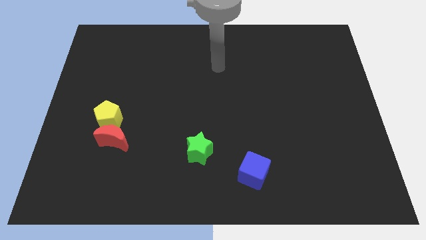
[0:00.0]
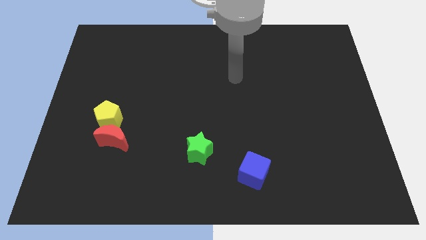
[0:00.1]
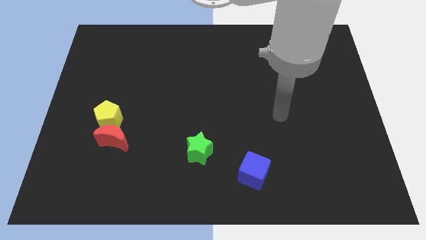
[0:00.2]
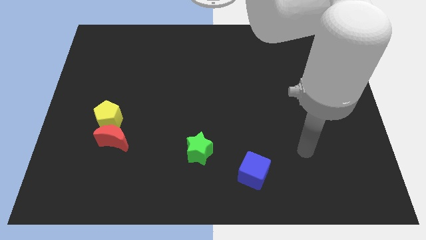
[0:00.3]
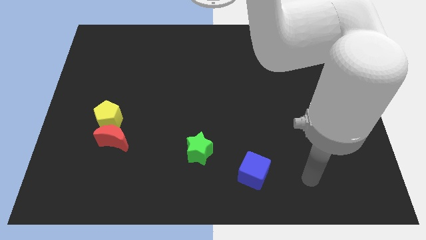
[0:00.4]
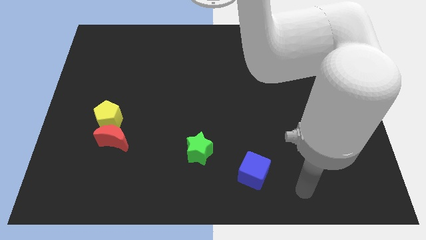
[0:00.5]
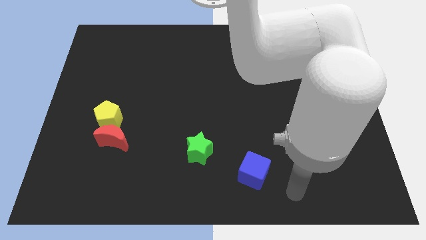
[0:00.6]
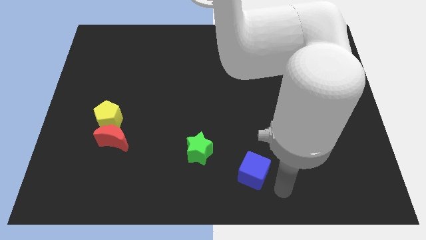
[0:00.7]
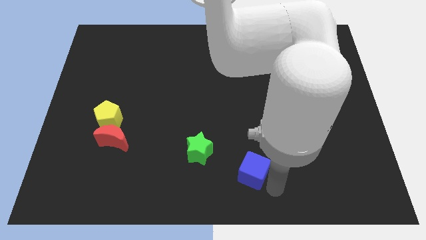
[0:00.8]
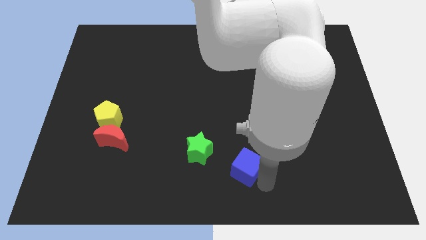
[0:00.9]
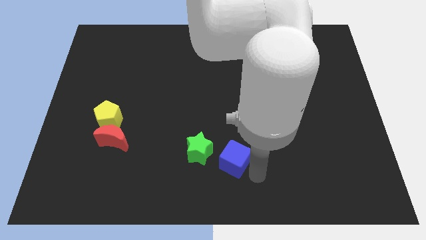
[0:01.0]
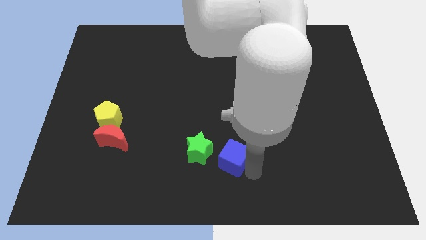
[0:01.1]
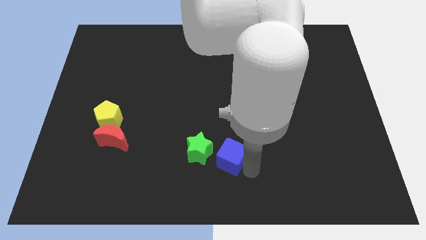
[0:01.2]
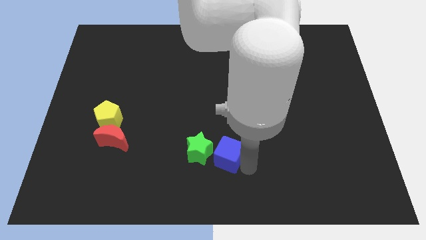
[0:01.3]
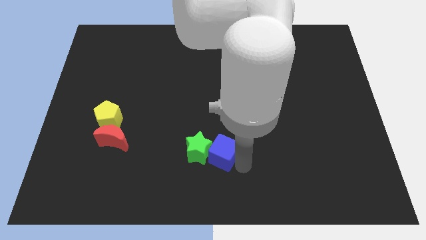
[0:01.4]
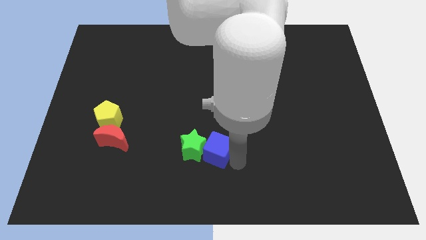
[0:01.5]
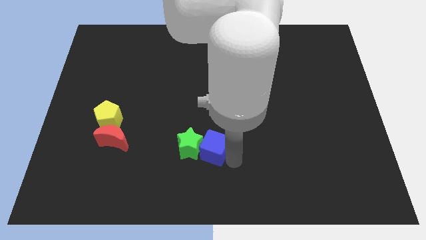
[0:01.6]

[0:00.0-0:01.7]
push the blue block towards the green star

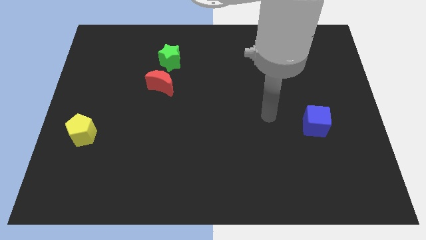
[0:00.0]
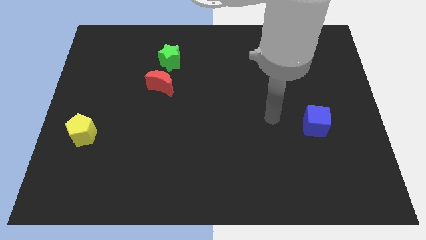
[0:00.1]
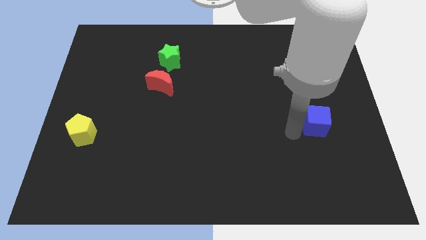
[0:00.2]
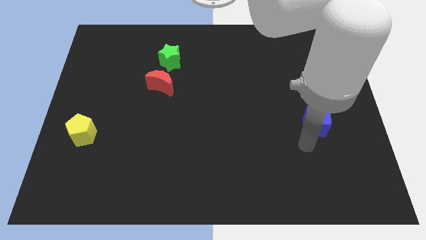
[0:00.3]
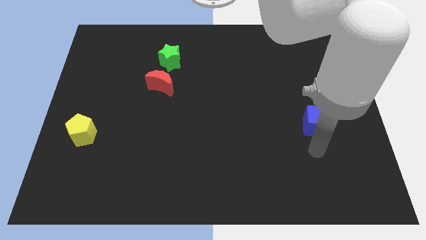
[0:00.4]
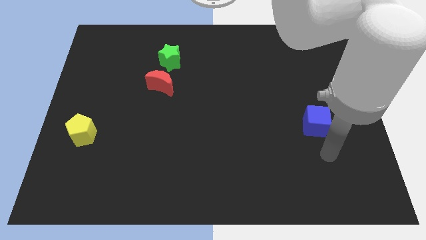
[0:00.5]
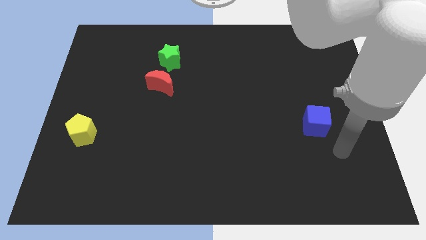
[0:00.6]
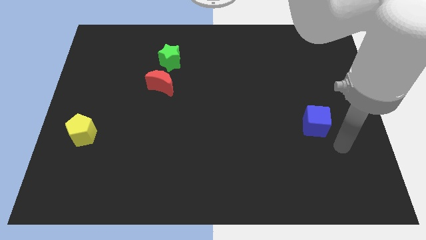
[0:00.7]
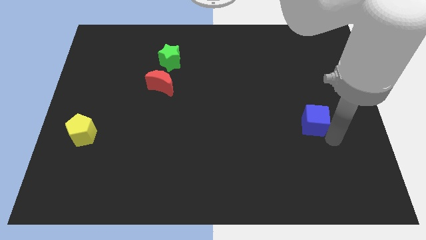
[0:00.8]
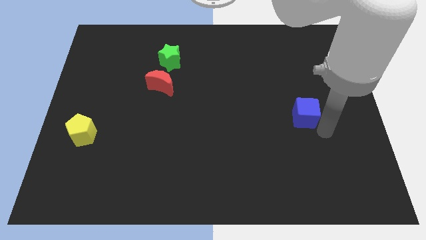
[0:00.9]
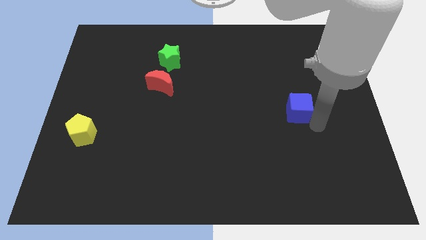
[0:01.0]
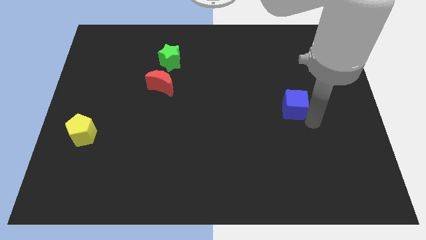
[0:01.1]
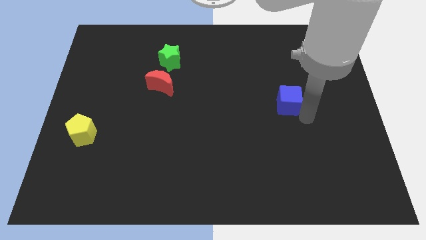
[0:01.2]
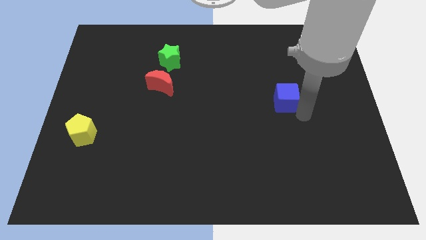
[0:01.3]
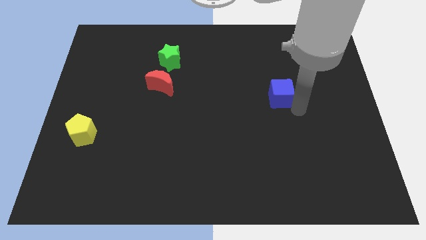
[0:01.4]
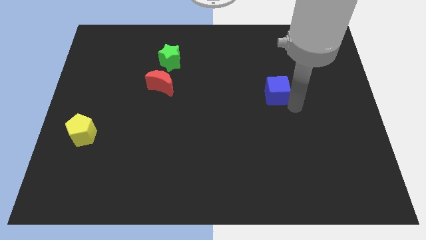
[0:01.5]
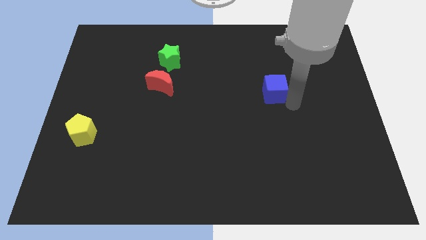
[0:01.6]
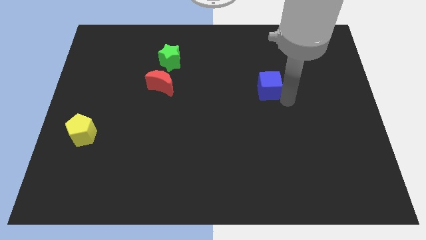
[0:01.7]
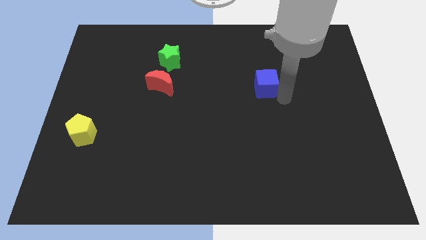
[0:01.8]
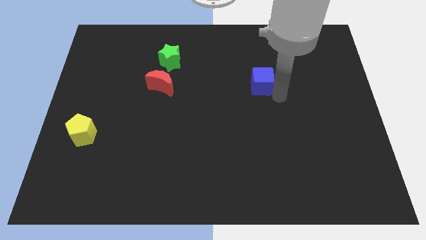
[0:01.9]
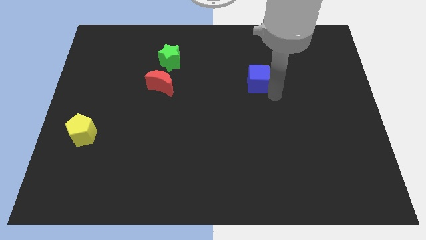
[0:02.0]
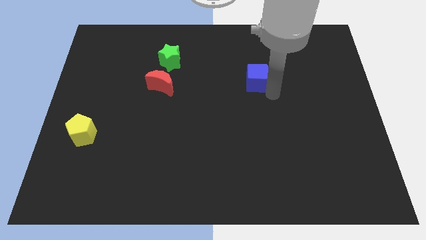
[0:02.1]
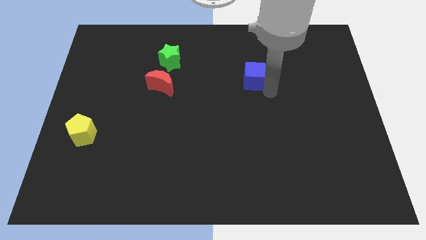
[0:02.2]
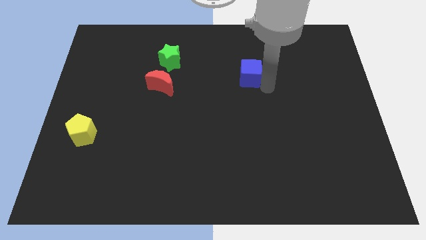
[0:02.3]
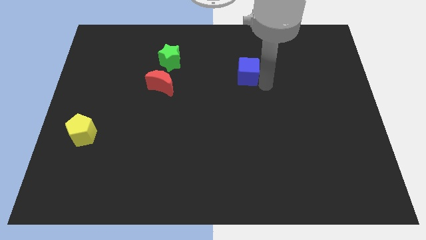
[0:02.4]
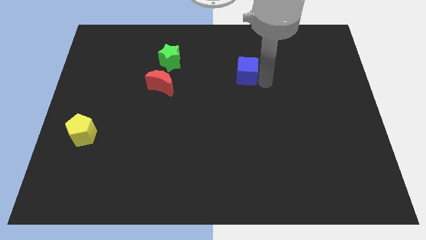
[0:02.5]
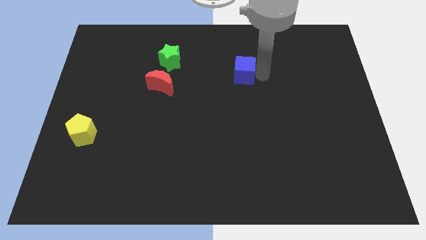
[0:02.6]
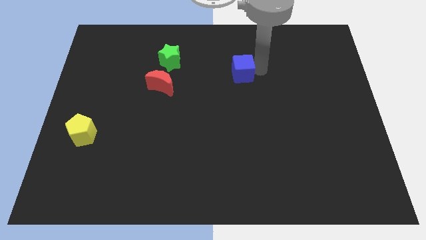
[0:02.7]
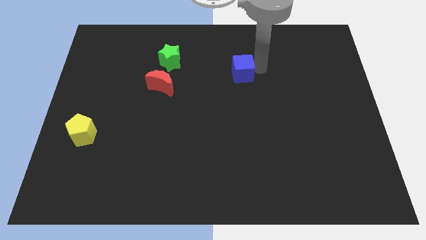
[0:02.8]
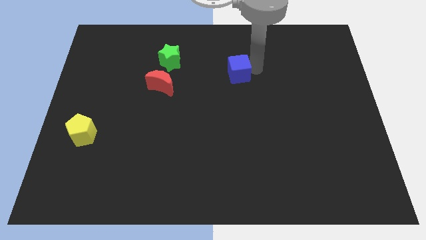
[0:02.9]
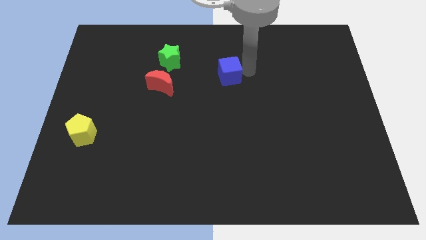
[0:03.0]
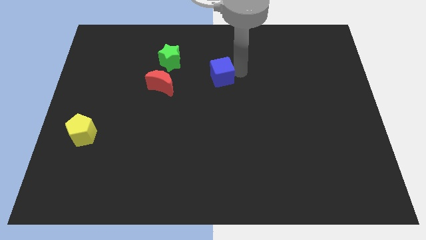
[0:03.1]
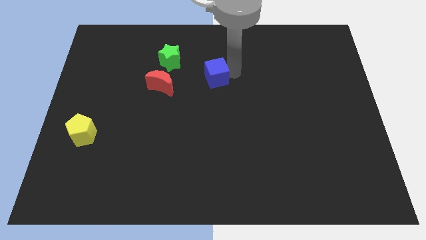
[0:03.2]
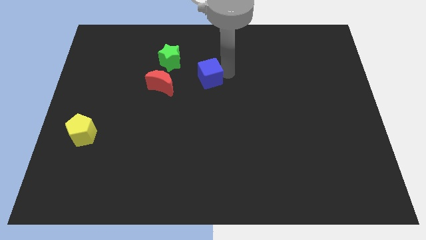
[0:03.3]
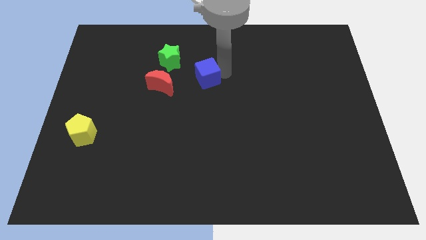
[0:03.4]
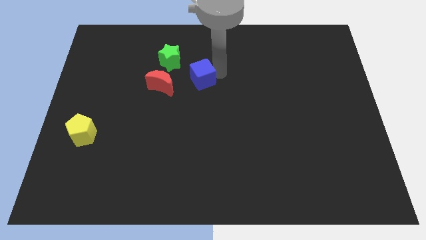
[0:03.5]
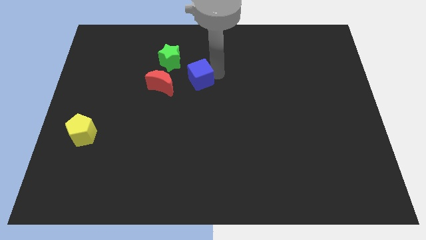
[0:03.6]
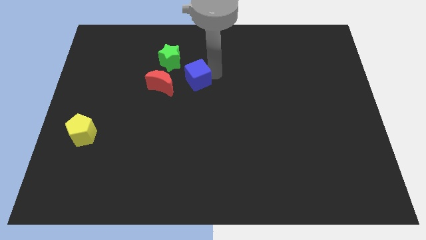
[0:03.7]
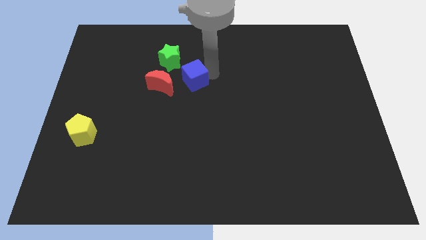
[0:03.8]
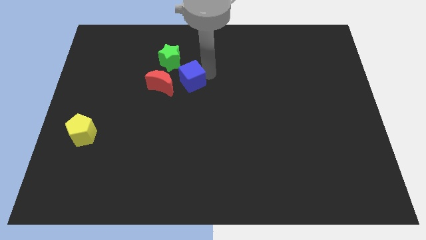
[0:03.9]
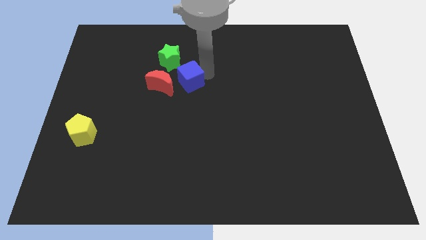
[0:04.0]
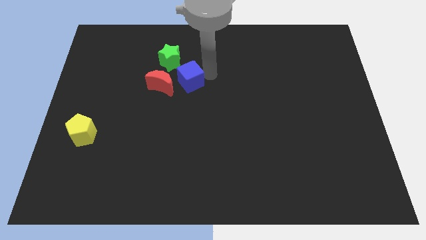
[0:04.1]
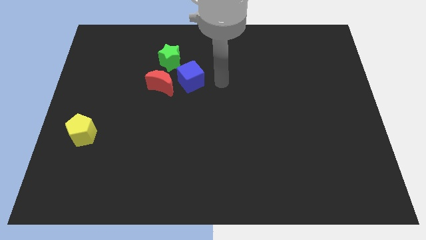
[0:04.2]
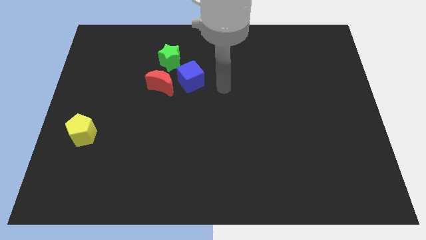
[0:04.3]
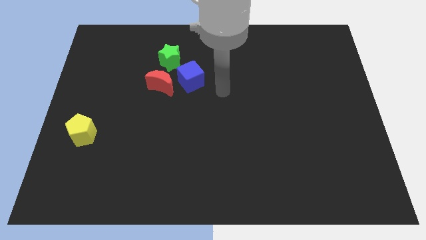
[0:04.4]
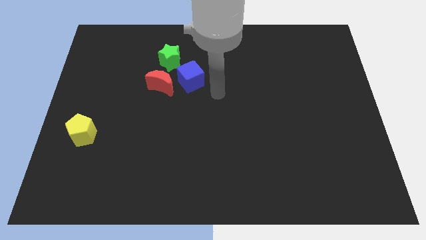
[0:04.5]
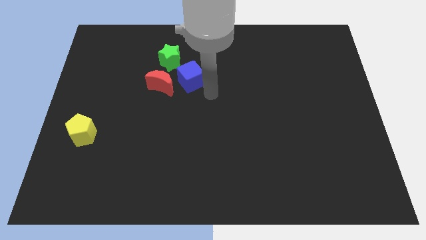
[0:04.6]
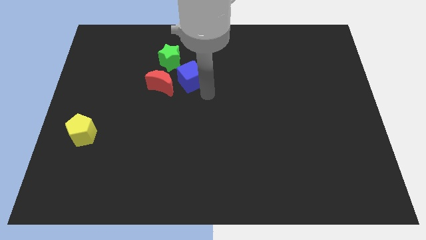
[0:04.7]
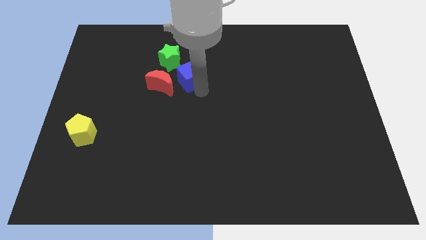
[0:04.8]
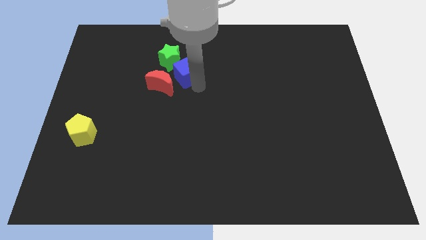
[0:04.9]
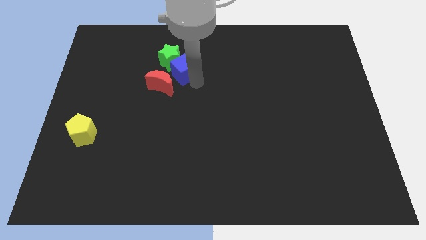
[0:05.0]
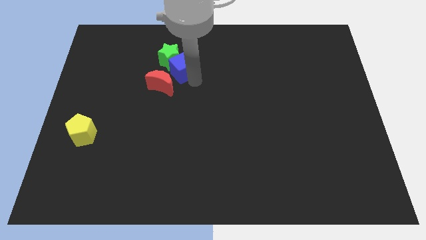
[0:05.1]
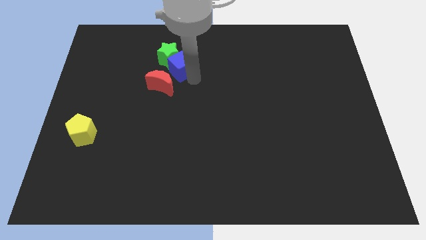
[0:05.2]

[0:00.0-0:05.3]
put the blue cube close to the star

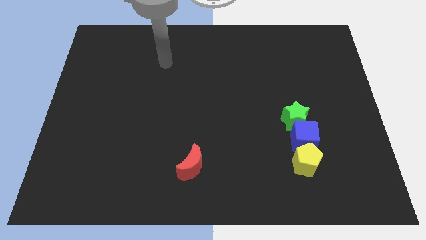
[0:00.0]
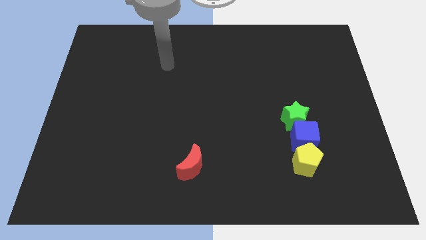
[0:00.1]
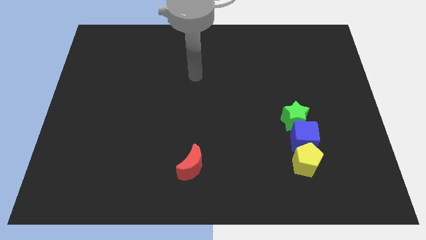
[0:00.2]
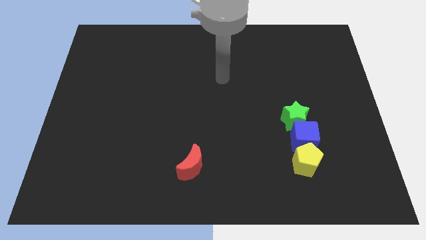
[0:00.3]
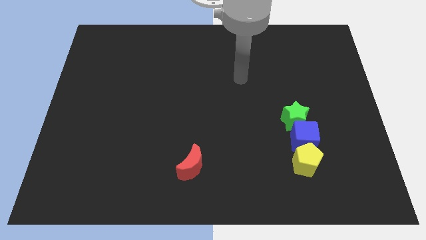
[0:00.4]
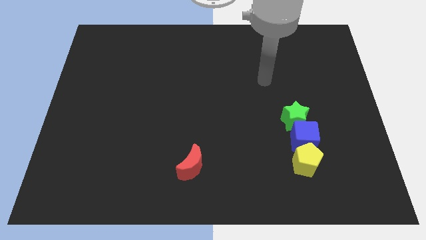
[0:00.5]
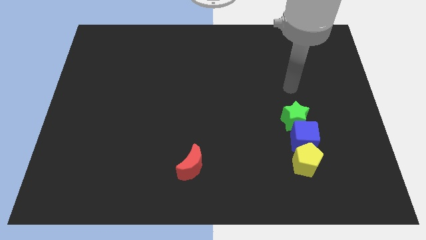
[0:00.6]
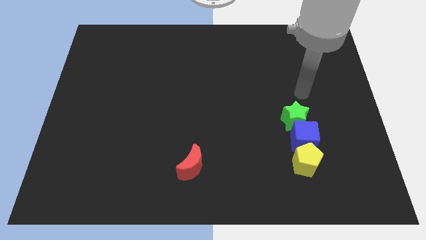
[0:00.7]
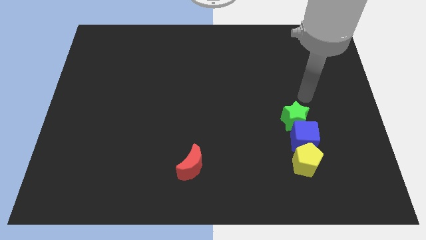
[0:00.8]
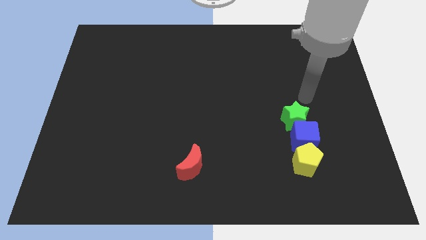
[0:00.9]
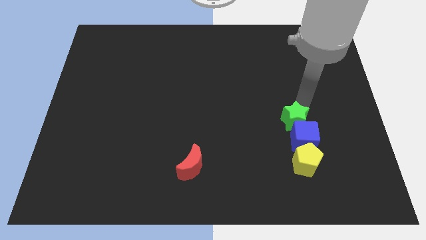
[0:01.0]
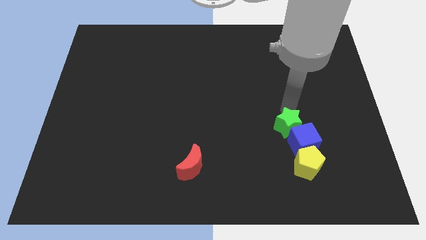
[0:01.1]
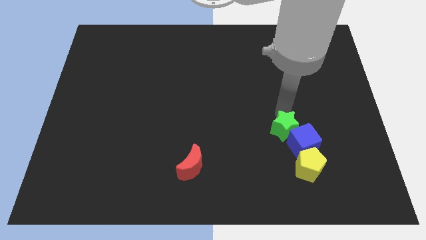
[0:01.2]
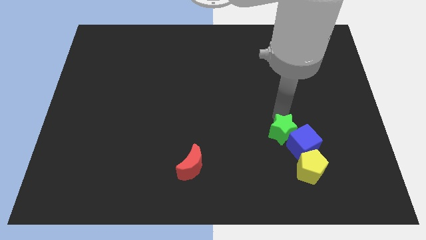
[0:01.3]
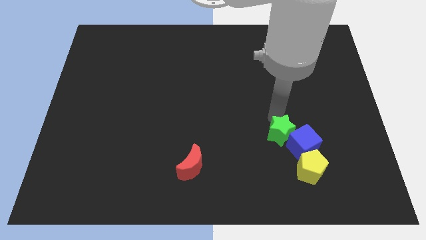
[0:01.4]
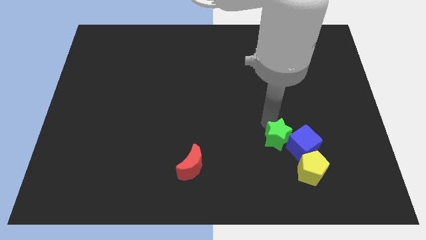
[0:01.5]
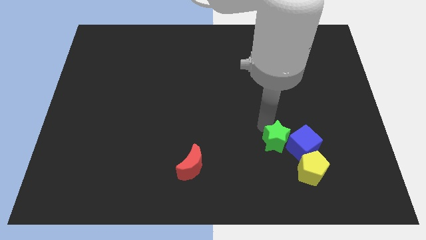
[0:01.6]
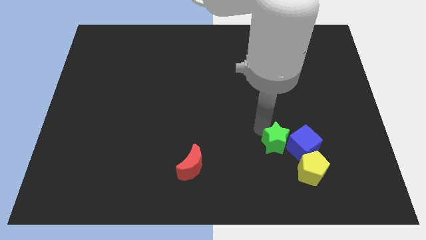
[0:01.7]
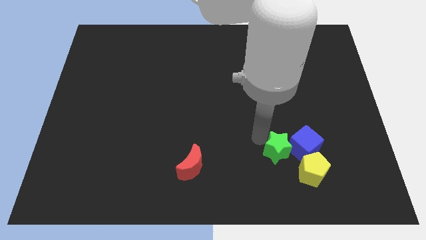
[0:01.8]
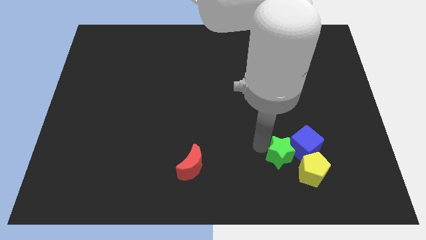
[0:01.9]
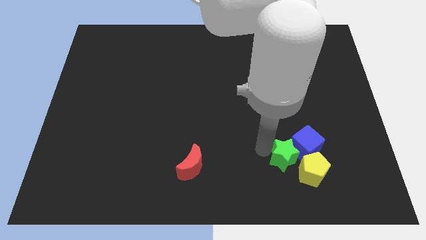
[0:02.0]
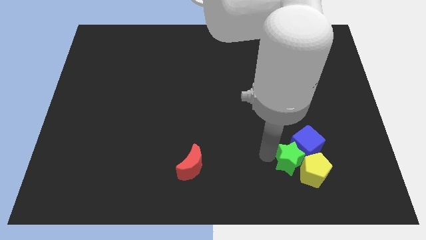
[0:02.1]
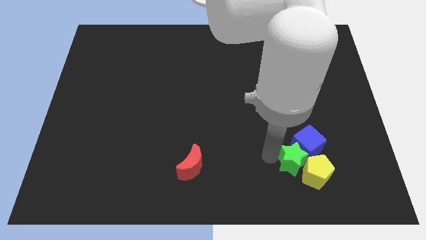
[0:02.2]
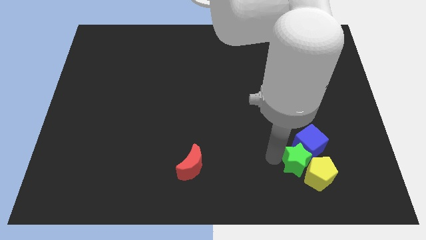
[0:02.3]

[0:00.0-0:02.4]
put the green block next to the yellow pentagon
